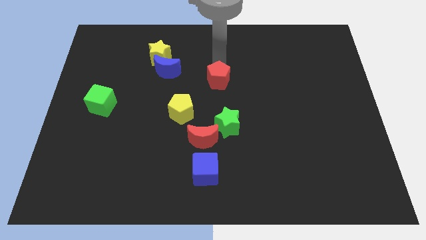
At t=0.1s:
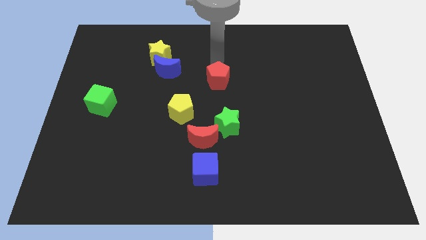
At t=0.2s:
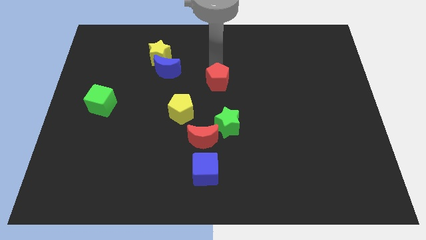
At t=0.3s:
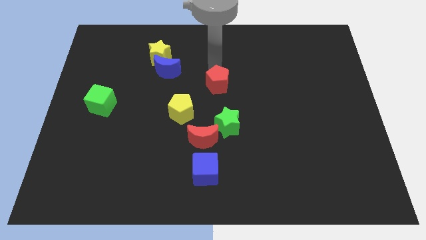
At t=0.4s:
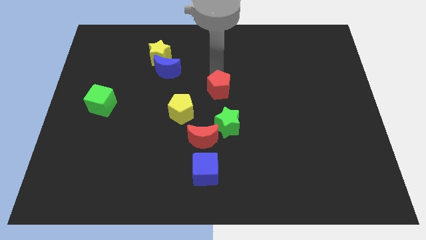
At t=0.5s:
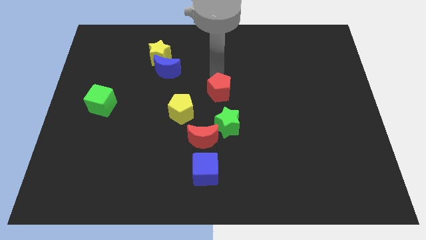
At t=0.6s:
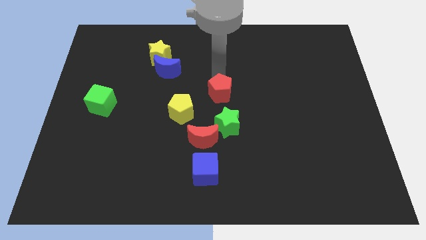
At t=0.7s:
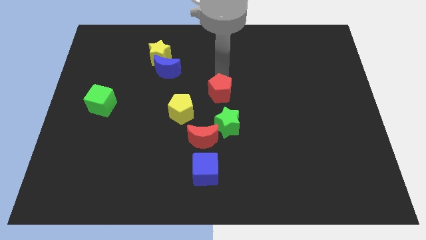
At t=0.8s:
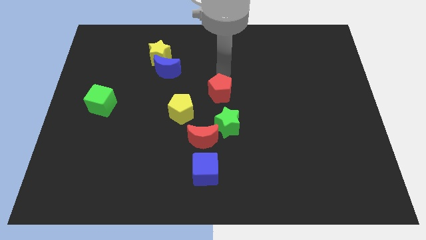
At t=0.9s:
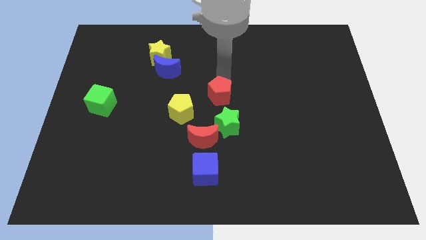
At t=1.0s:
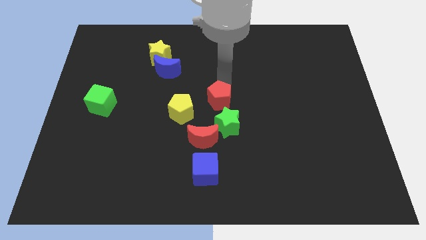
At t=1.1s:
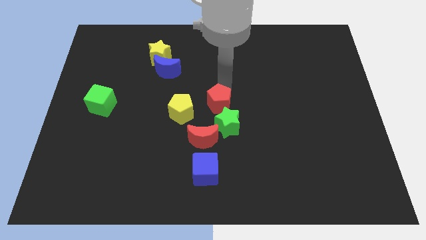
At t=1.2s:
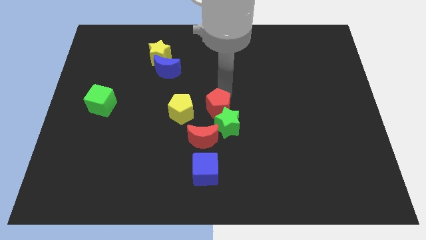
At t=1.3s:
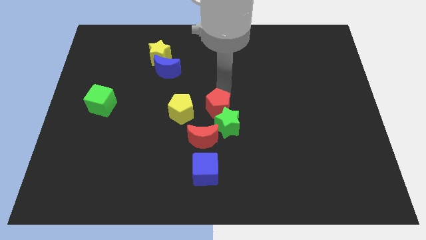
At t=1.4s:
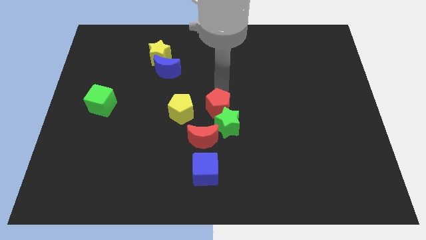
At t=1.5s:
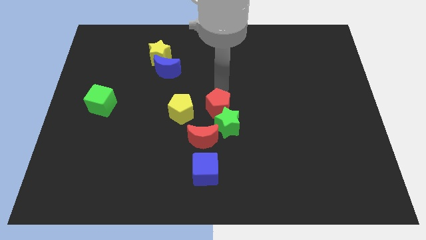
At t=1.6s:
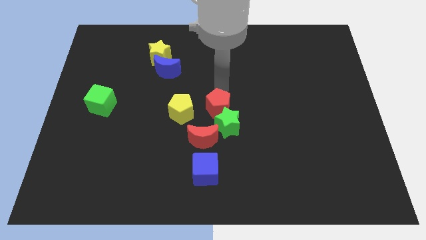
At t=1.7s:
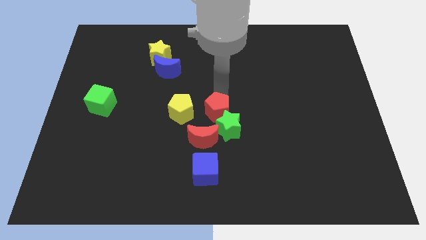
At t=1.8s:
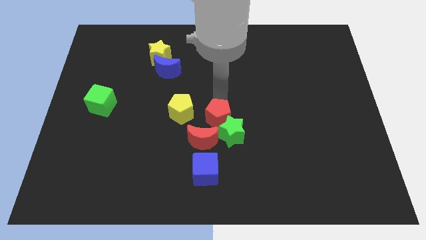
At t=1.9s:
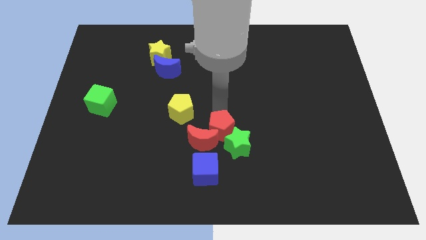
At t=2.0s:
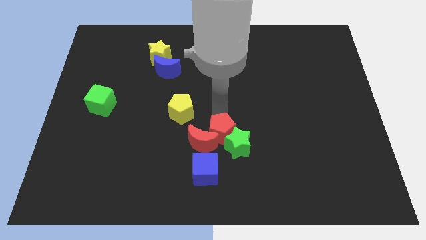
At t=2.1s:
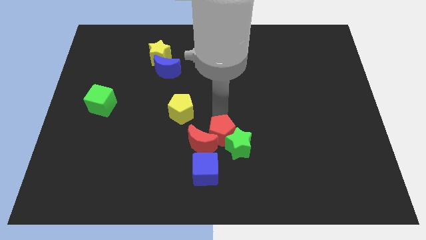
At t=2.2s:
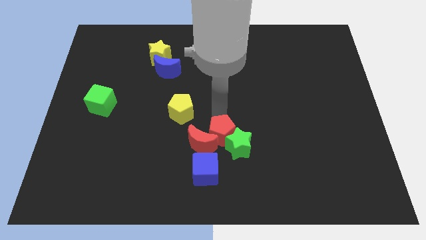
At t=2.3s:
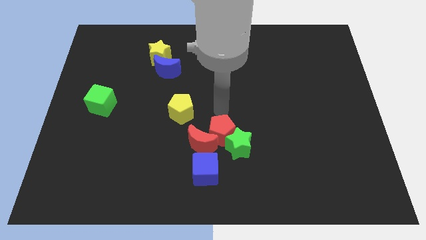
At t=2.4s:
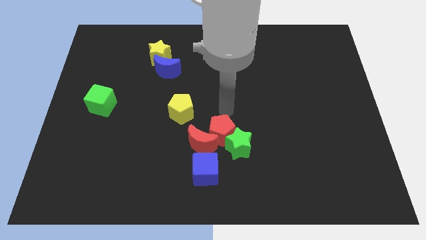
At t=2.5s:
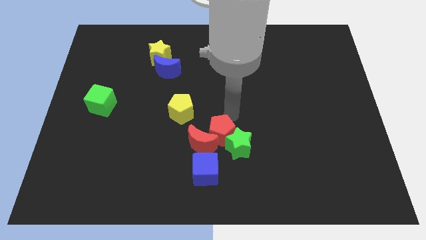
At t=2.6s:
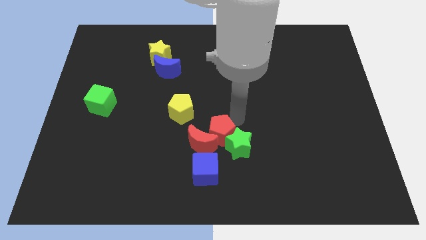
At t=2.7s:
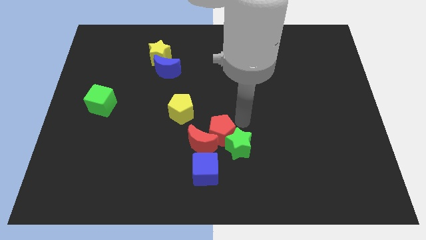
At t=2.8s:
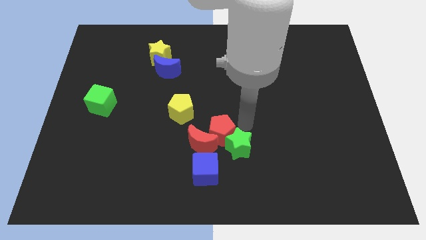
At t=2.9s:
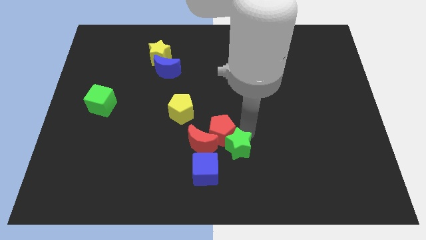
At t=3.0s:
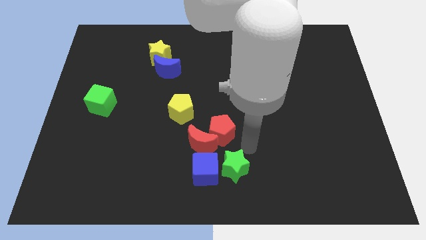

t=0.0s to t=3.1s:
push the red pentagon into the green star

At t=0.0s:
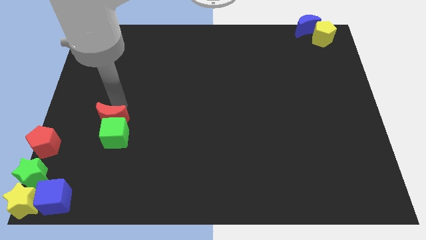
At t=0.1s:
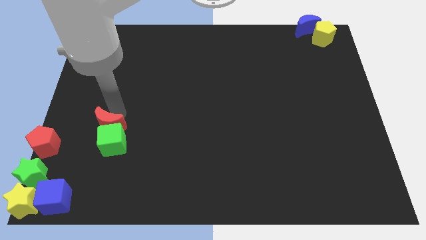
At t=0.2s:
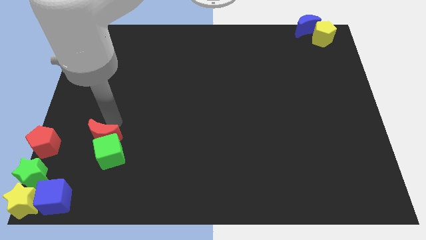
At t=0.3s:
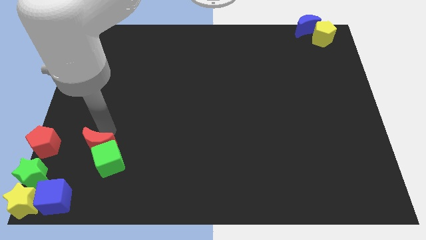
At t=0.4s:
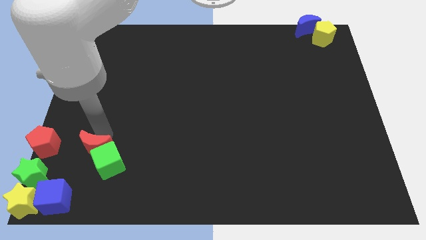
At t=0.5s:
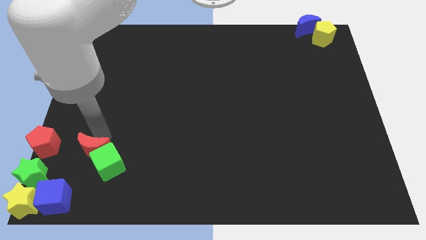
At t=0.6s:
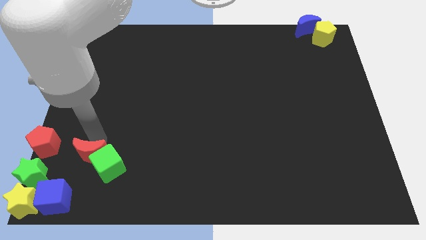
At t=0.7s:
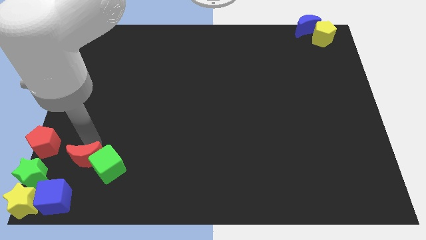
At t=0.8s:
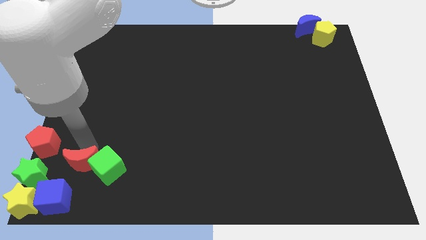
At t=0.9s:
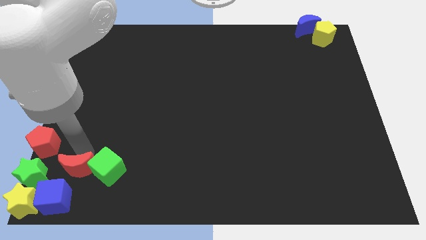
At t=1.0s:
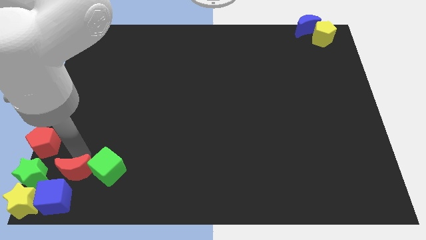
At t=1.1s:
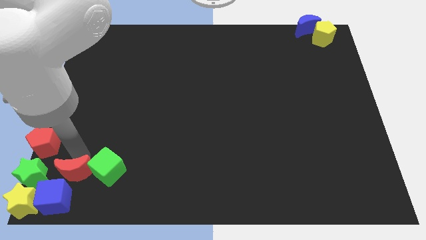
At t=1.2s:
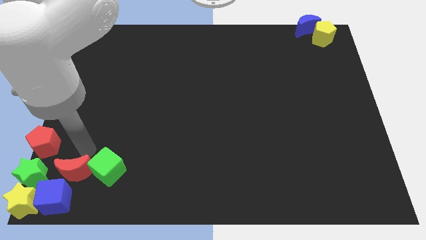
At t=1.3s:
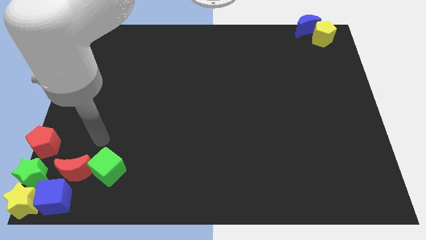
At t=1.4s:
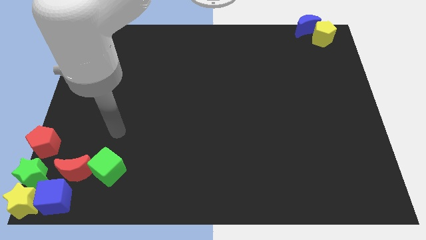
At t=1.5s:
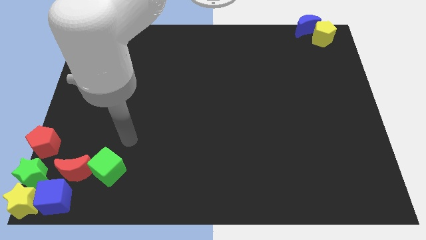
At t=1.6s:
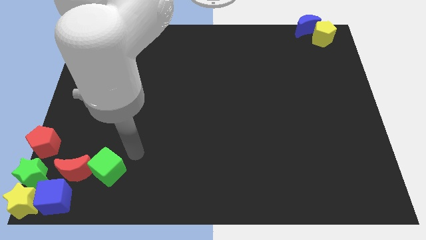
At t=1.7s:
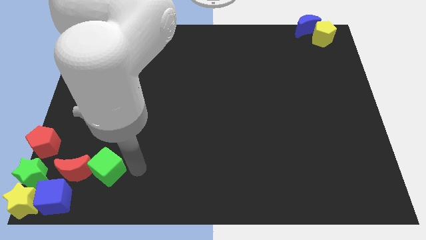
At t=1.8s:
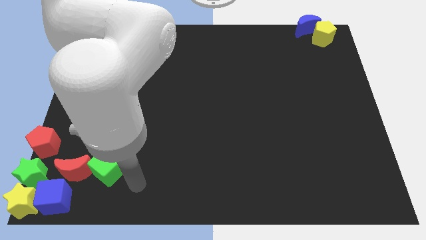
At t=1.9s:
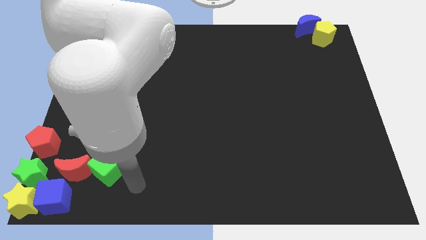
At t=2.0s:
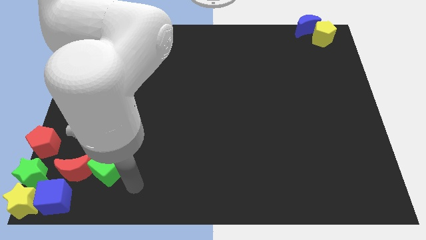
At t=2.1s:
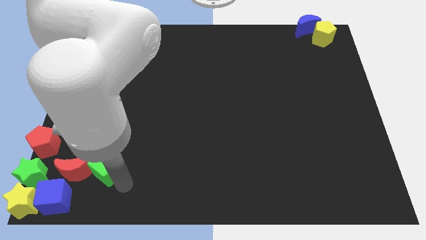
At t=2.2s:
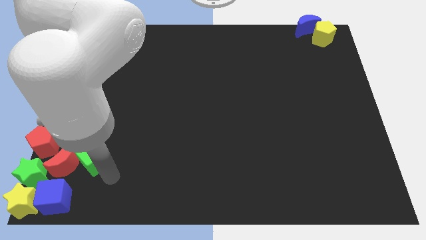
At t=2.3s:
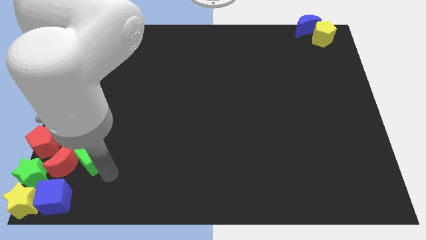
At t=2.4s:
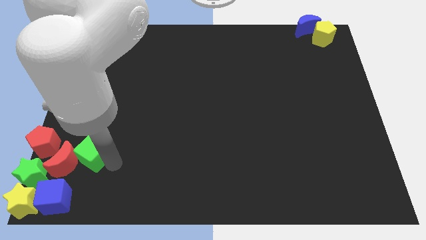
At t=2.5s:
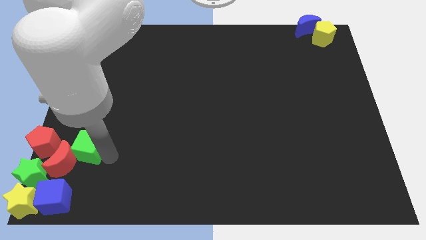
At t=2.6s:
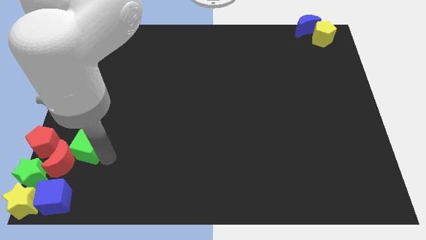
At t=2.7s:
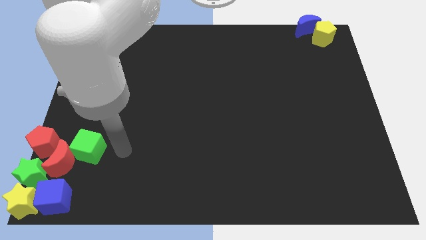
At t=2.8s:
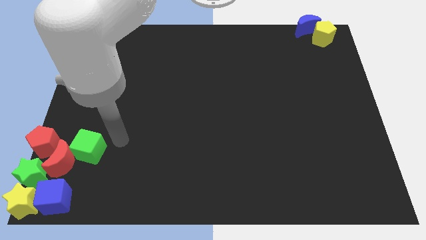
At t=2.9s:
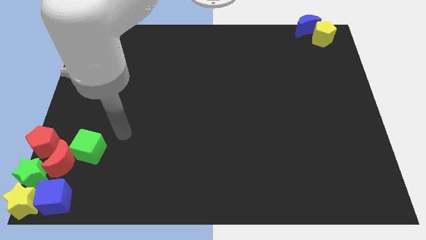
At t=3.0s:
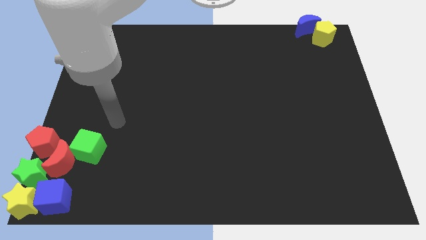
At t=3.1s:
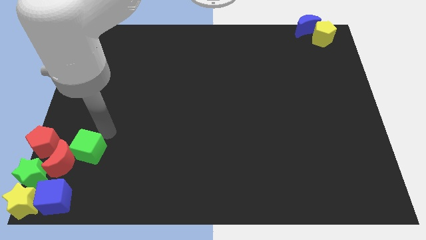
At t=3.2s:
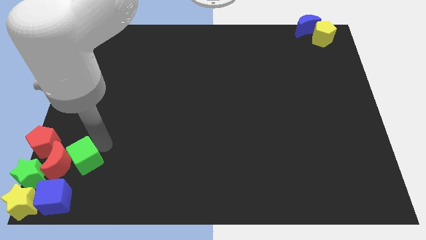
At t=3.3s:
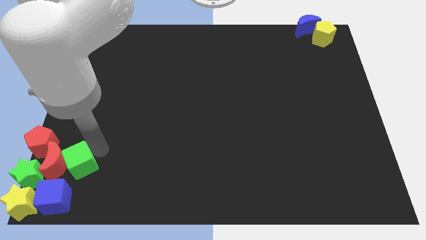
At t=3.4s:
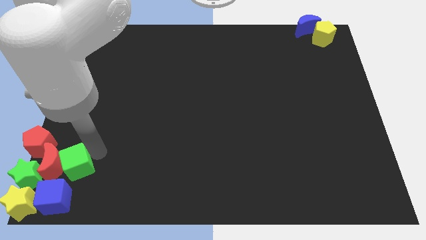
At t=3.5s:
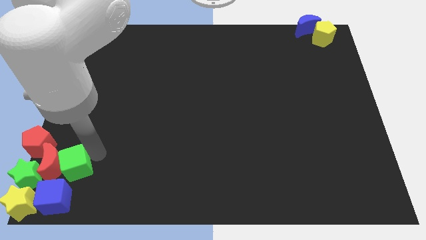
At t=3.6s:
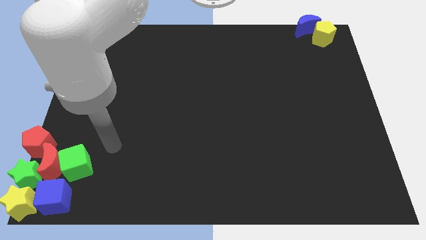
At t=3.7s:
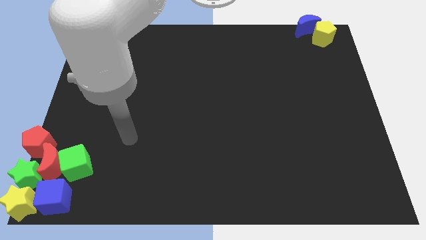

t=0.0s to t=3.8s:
move the green cube along with the red moon into the green star

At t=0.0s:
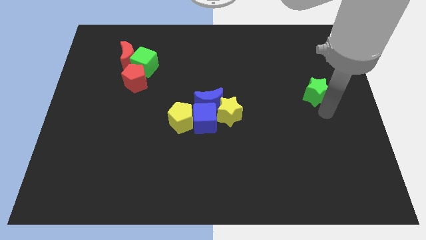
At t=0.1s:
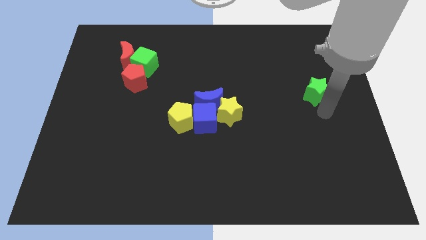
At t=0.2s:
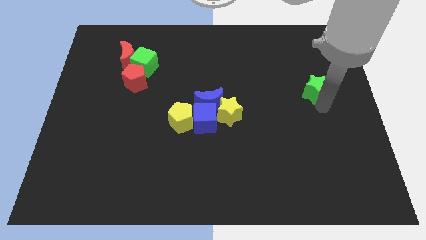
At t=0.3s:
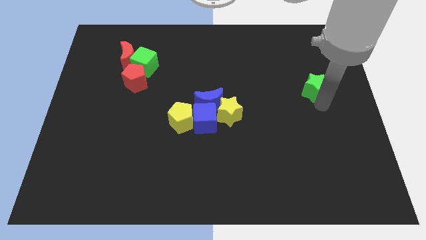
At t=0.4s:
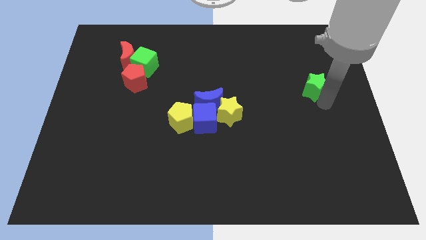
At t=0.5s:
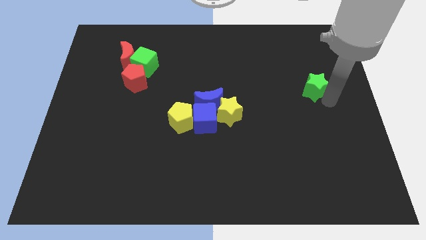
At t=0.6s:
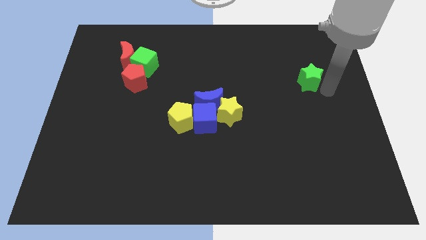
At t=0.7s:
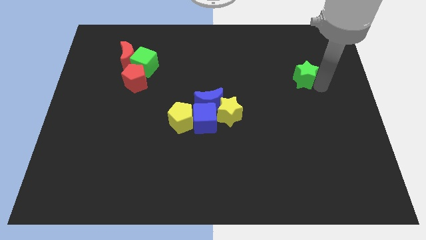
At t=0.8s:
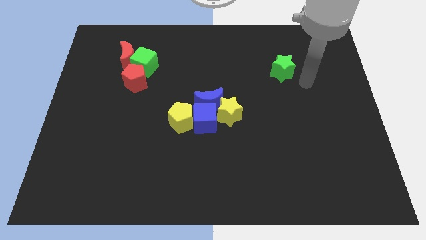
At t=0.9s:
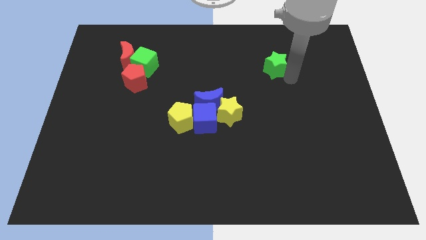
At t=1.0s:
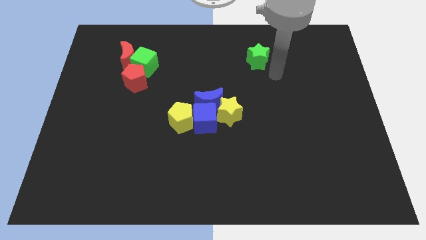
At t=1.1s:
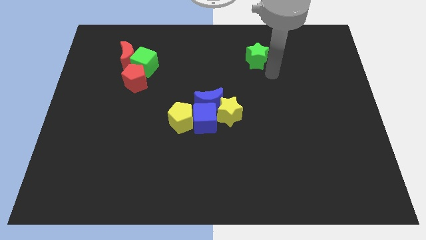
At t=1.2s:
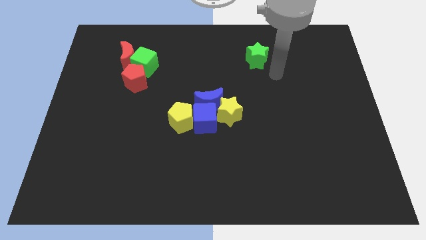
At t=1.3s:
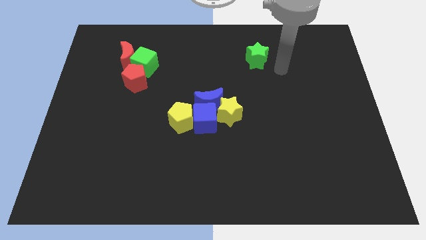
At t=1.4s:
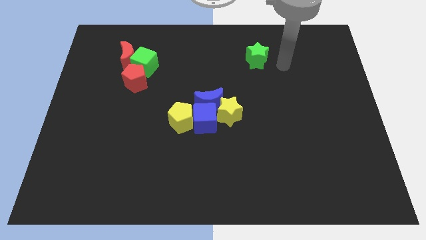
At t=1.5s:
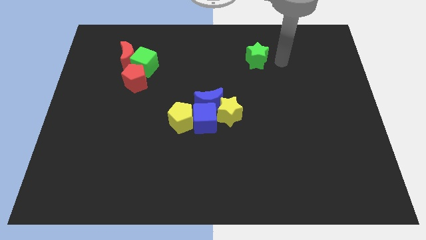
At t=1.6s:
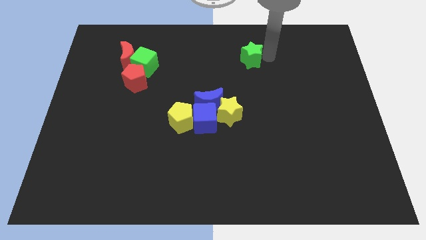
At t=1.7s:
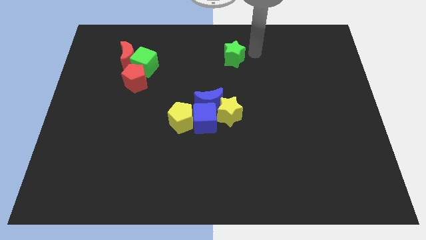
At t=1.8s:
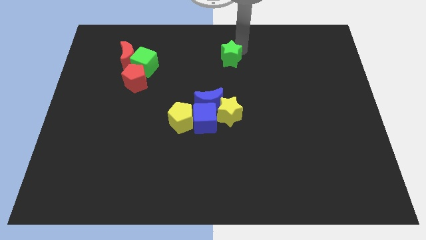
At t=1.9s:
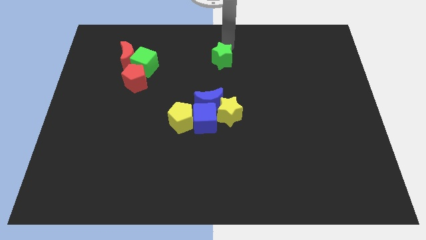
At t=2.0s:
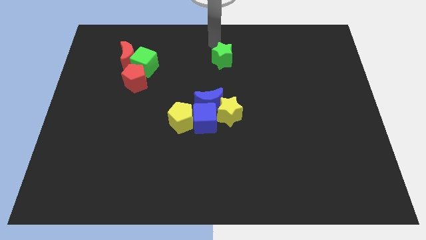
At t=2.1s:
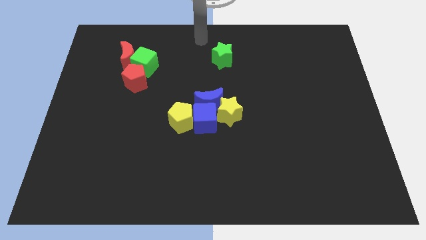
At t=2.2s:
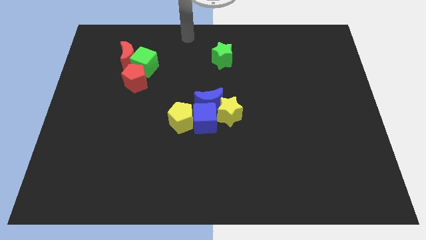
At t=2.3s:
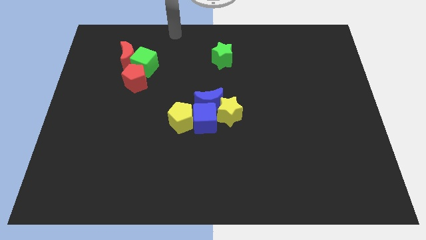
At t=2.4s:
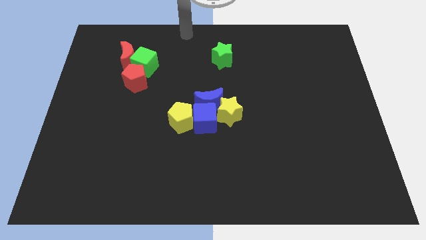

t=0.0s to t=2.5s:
place green star above yellow star
